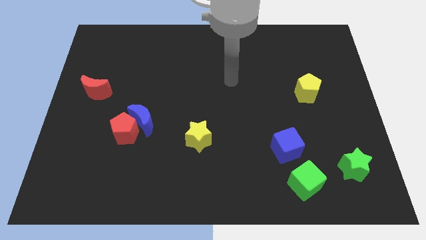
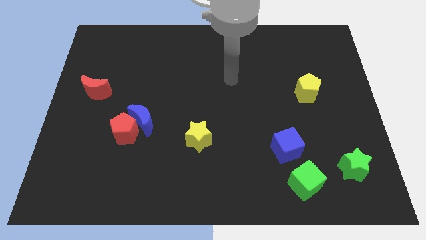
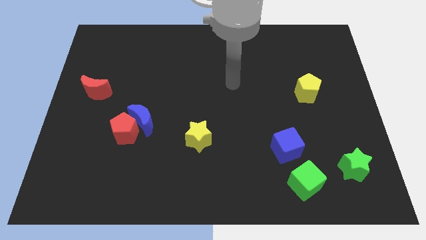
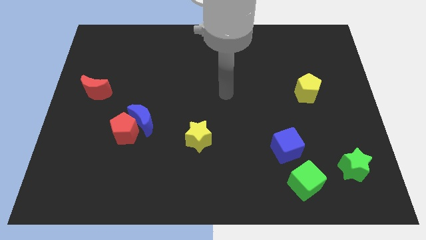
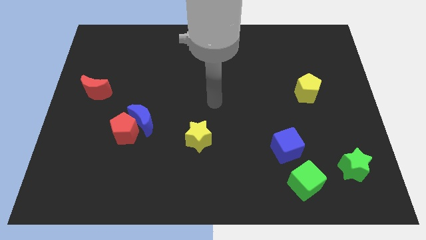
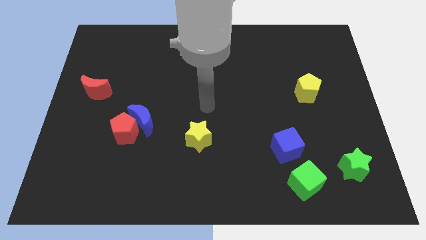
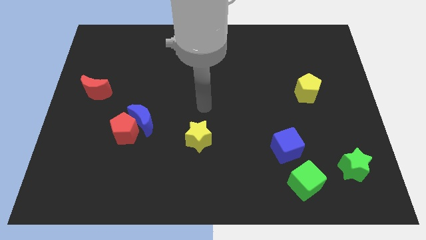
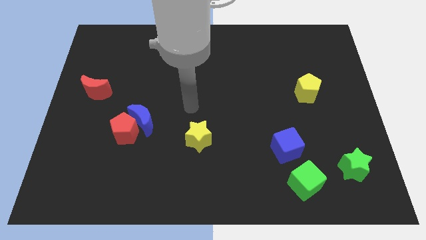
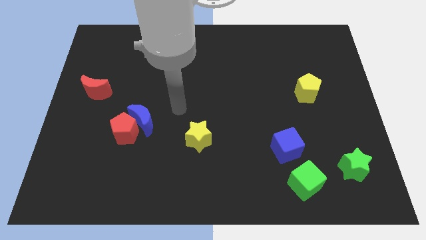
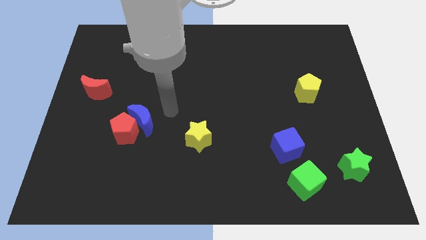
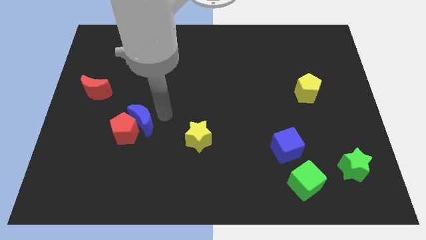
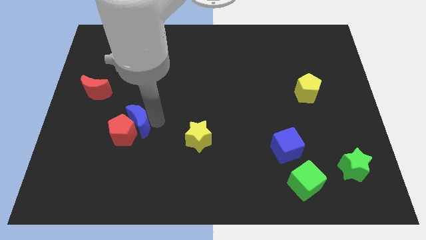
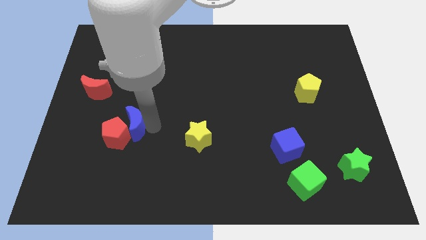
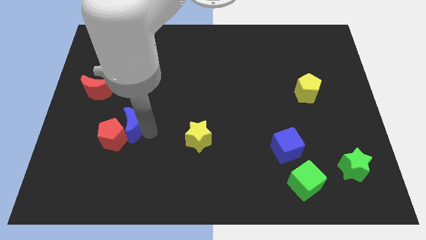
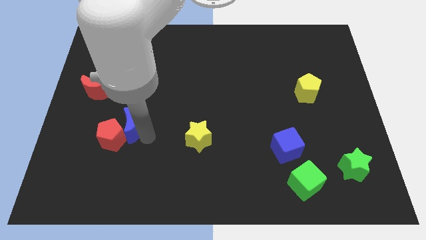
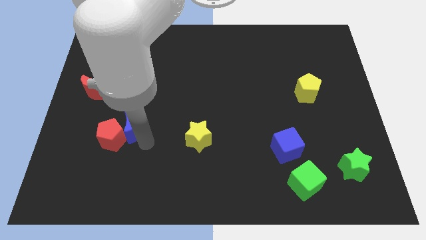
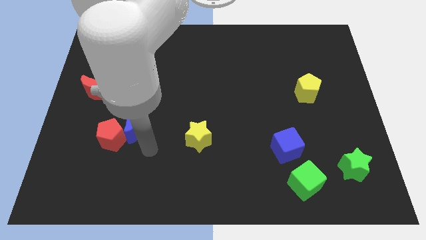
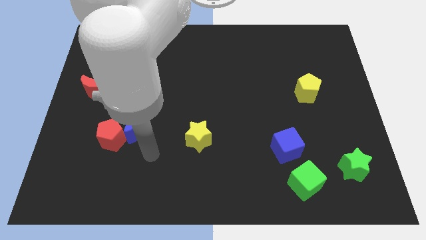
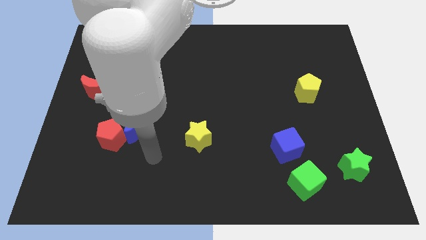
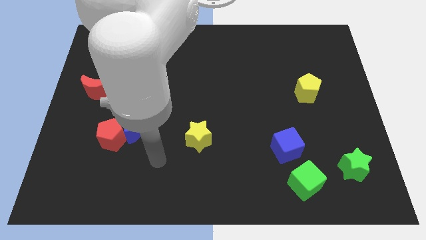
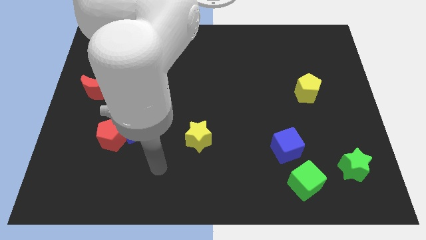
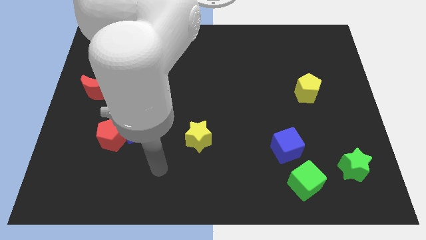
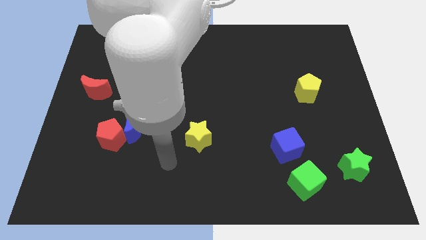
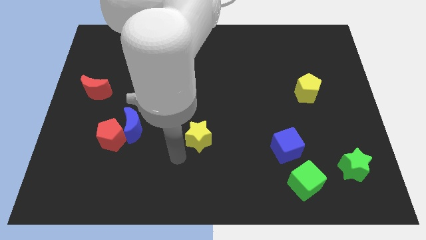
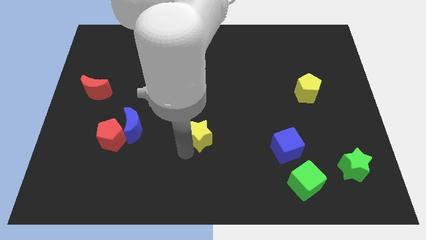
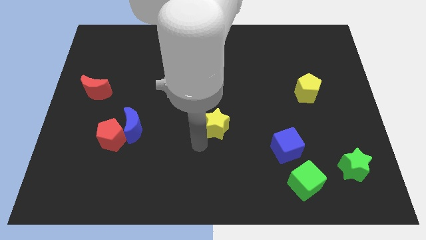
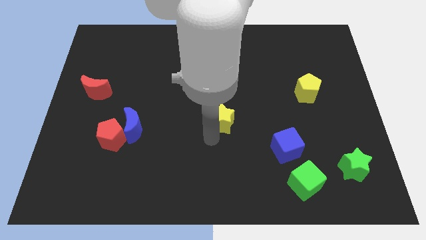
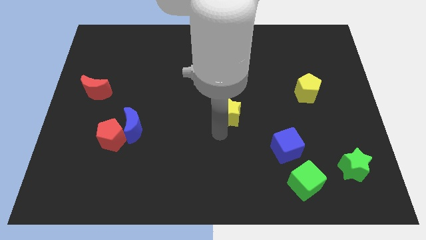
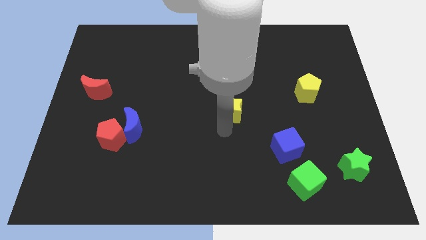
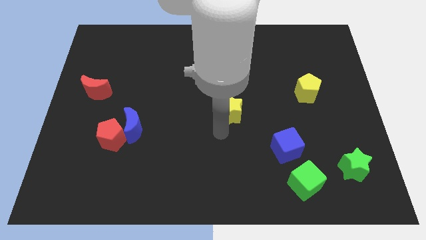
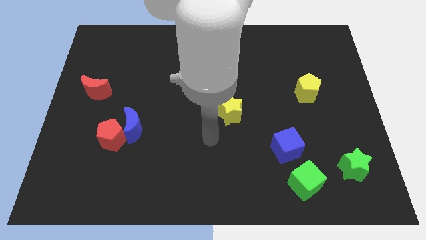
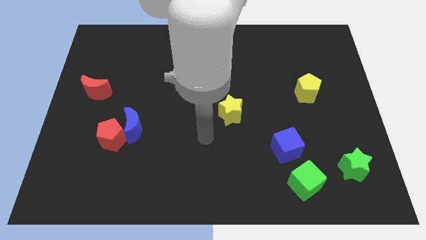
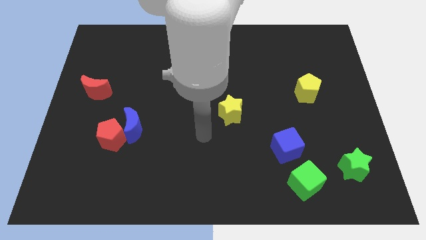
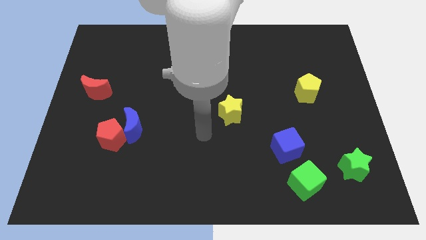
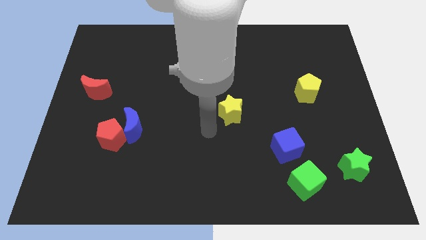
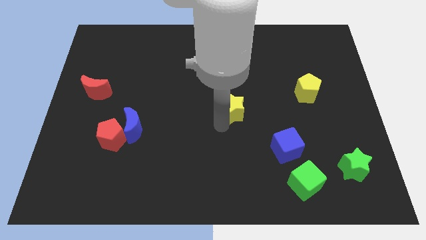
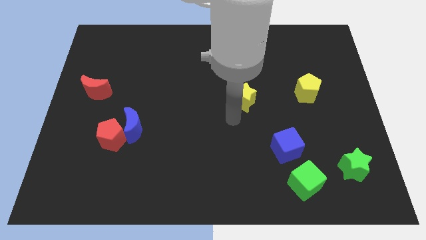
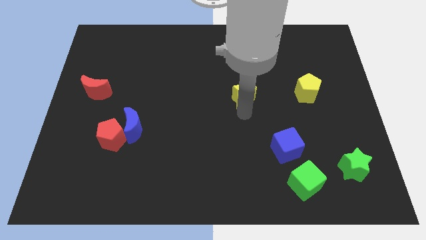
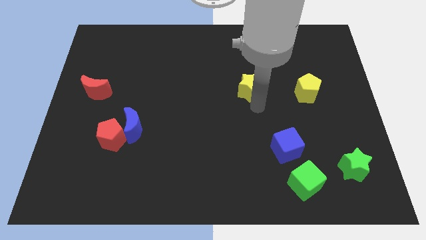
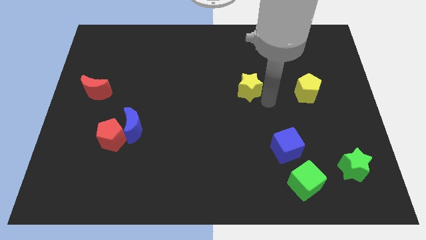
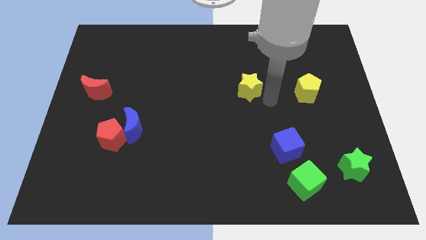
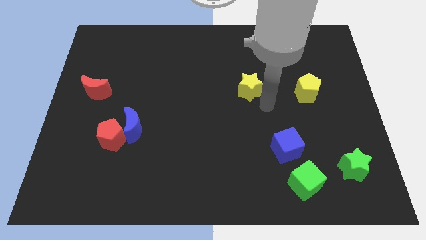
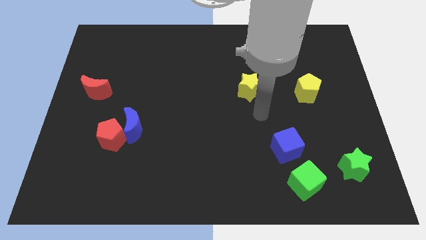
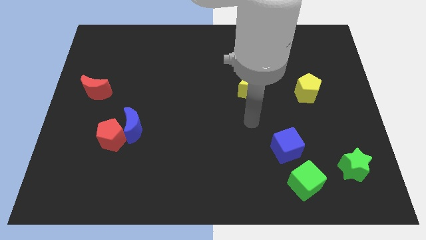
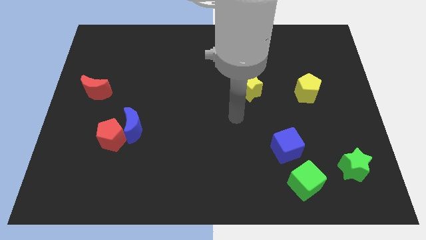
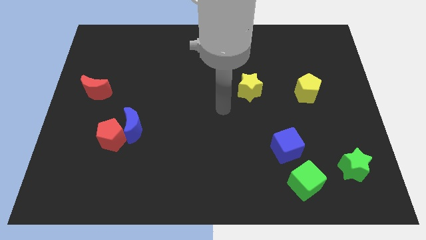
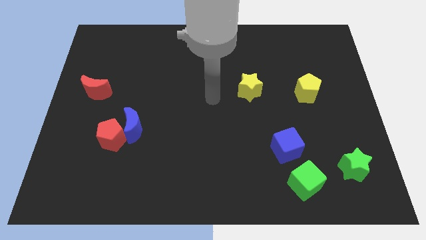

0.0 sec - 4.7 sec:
place the yellow star horizontally to the left side of the yellow pentagon

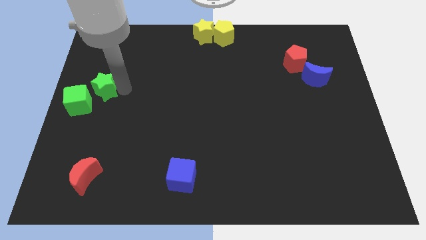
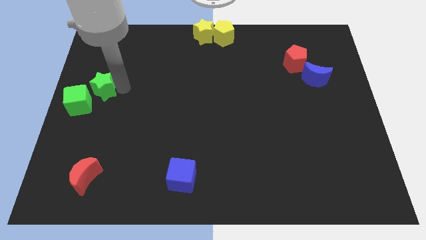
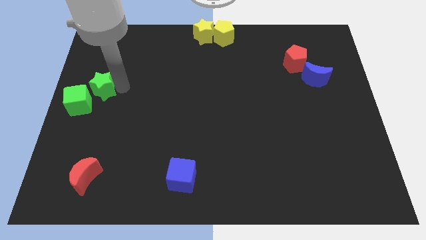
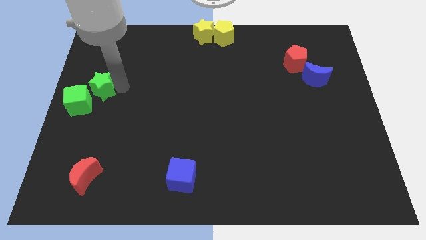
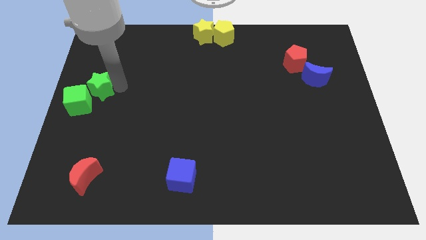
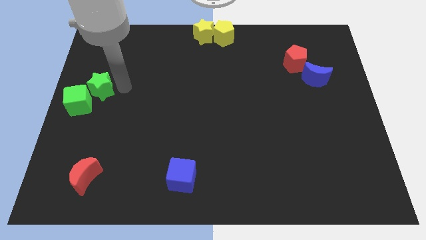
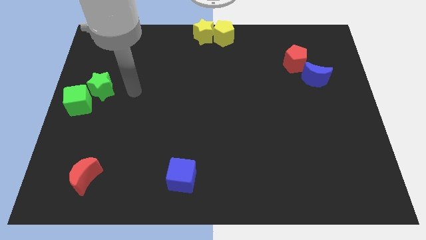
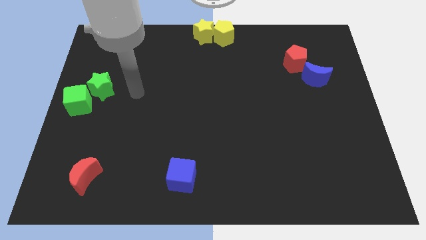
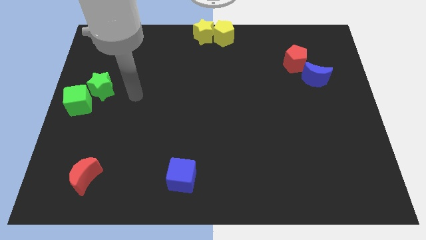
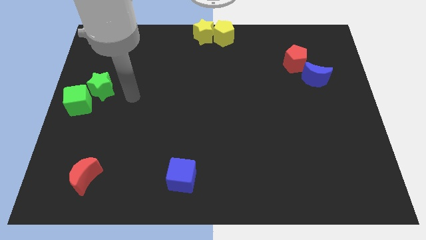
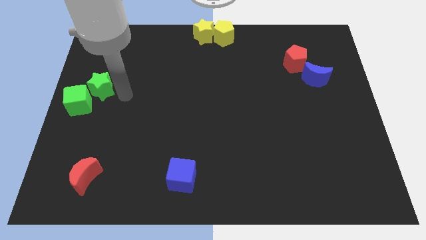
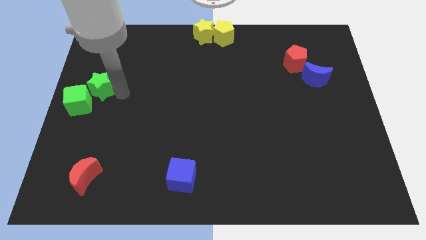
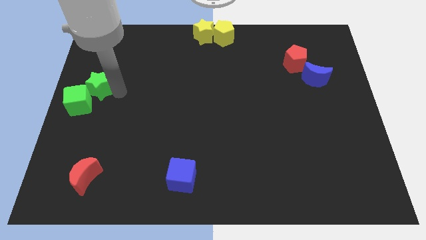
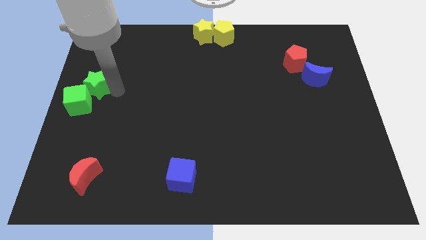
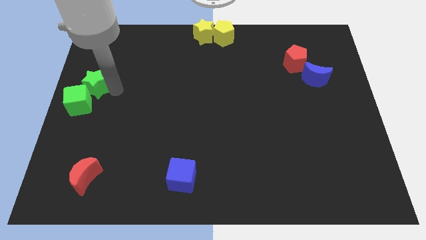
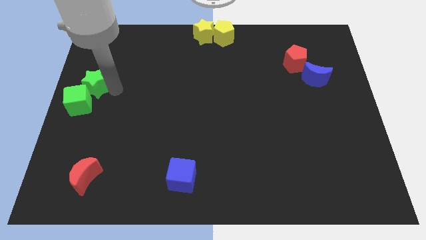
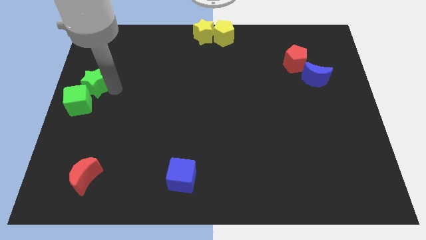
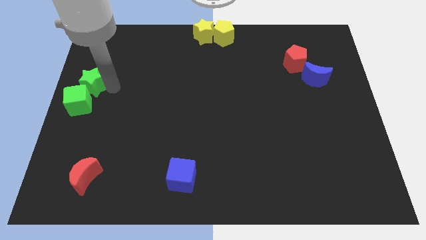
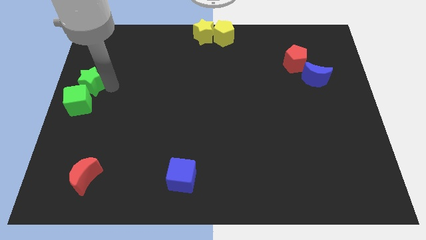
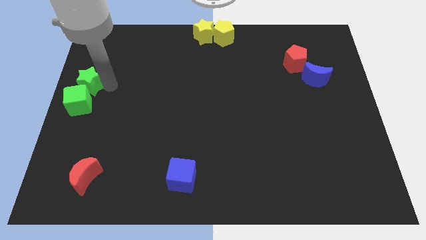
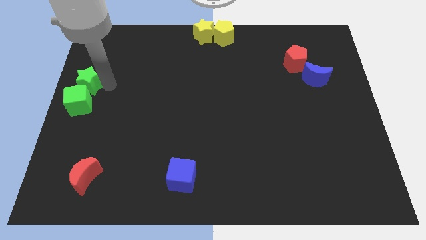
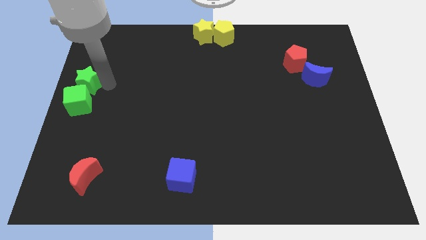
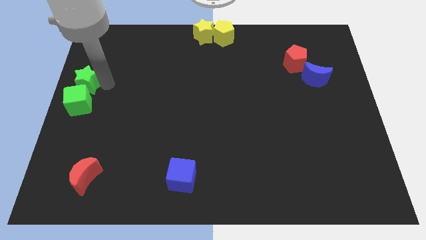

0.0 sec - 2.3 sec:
place the green star above the green cube

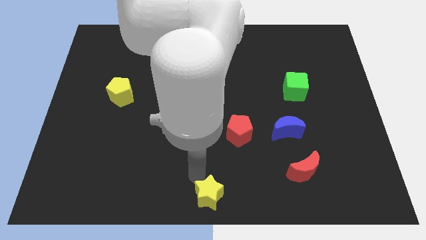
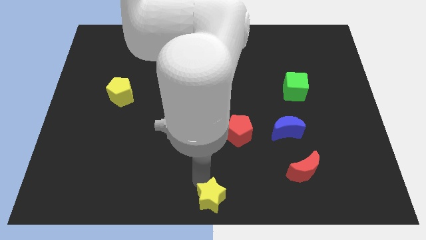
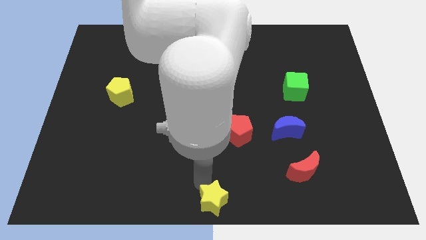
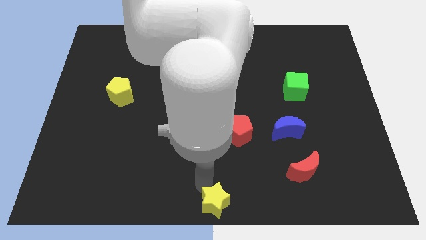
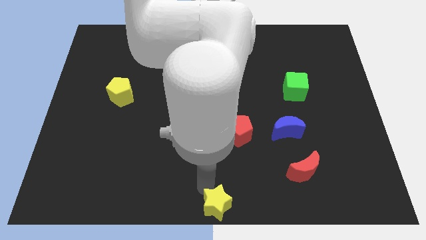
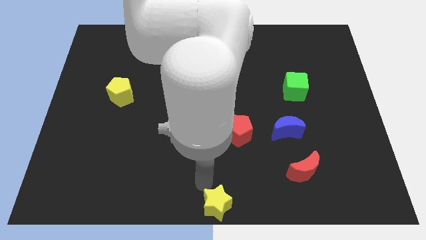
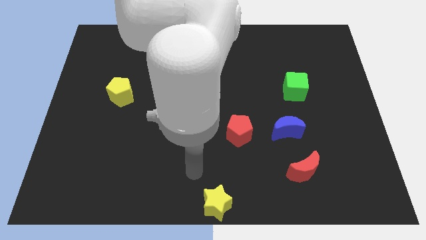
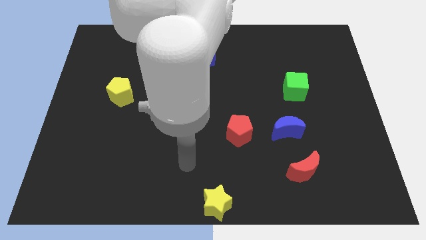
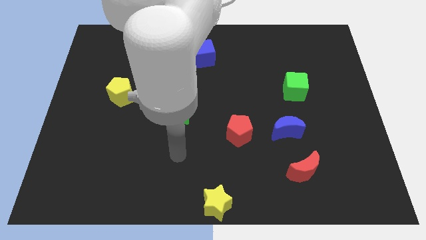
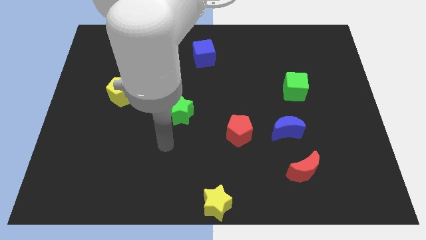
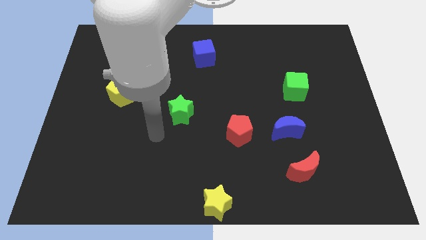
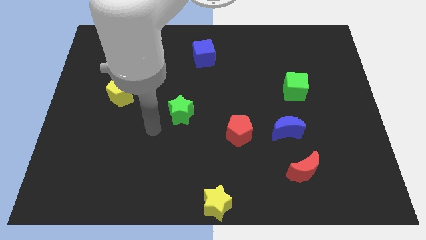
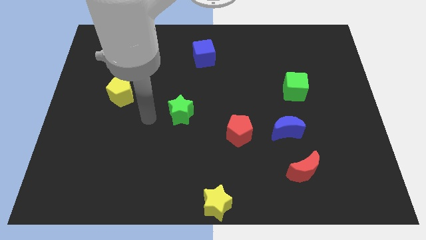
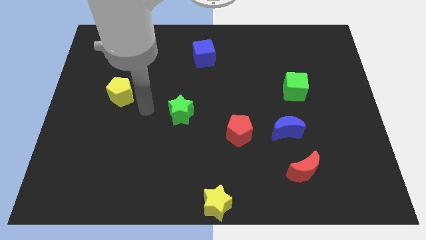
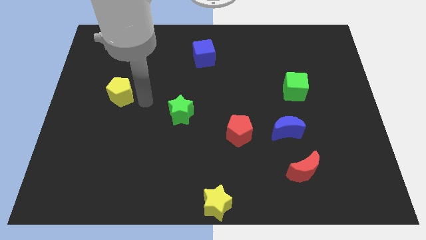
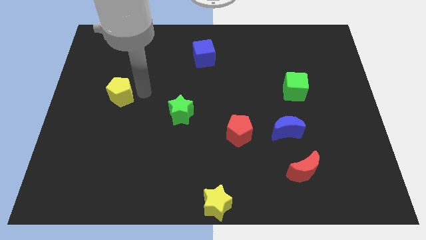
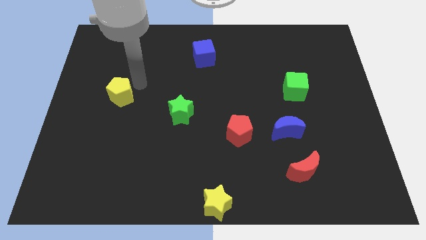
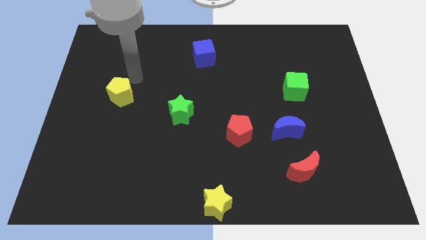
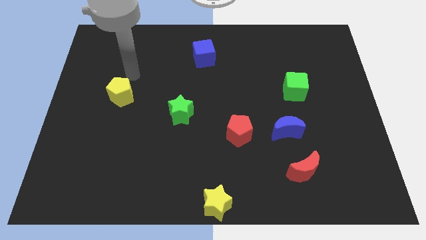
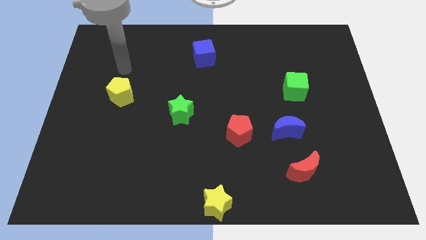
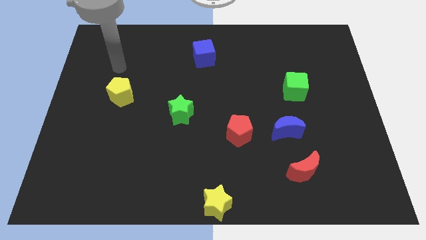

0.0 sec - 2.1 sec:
move the arm away from the yellow star
